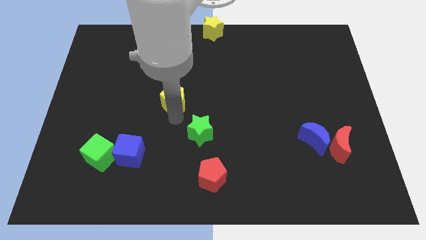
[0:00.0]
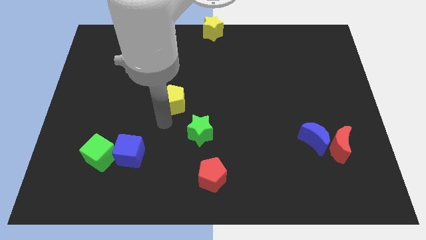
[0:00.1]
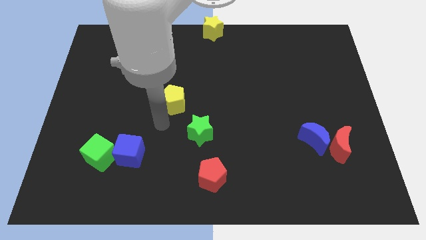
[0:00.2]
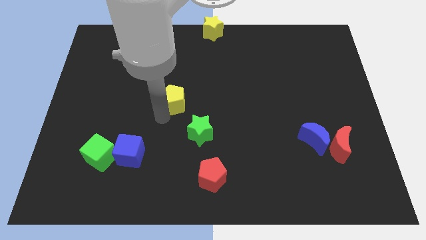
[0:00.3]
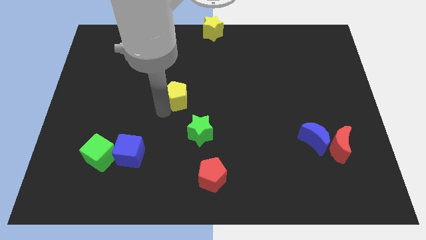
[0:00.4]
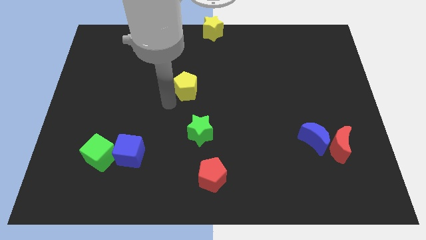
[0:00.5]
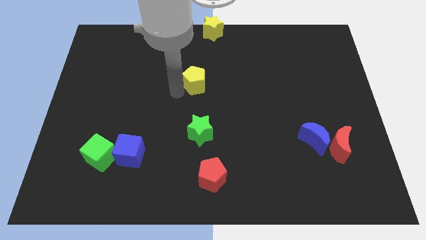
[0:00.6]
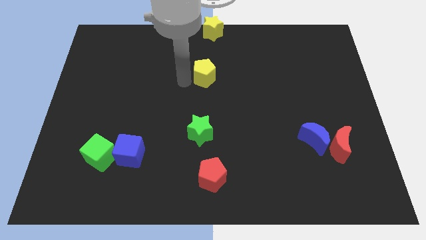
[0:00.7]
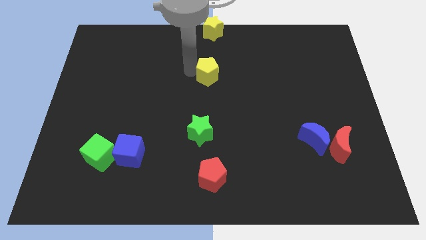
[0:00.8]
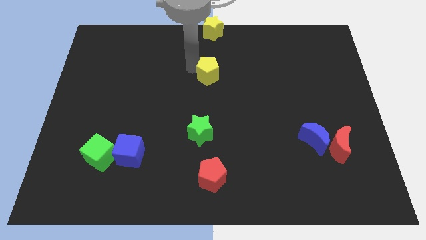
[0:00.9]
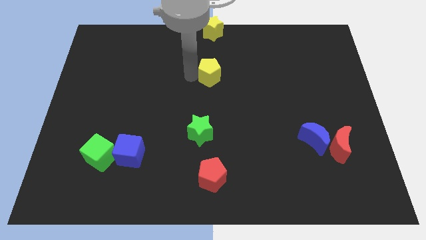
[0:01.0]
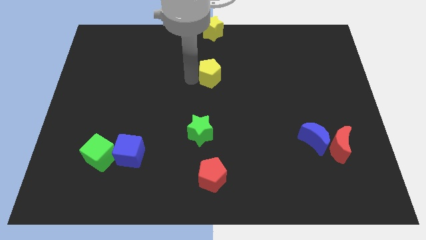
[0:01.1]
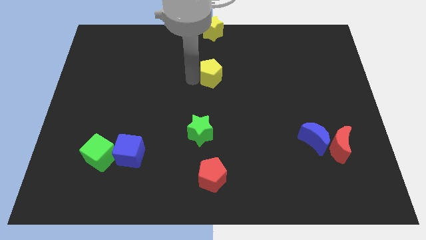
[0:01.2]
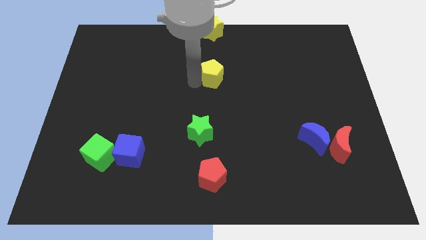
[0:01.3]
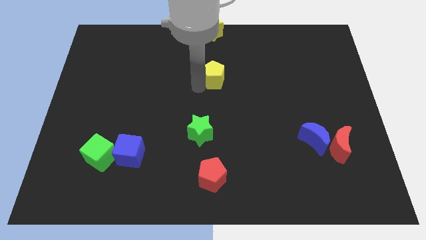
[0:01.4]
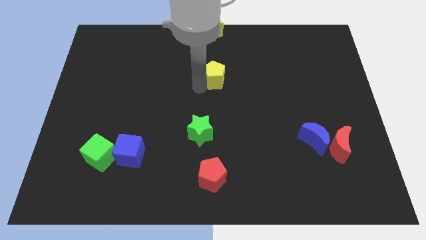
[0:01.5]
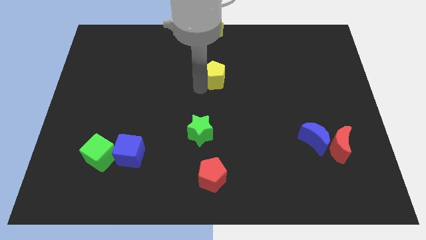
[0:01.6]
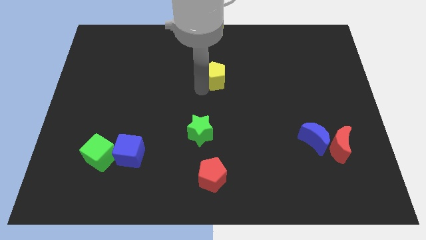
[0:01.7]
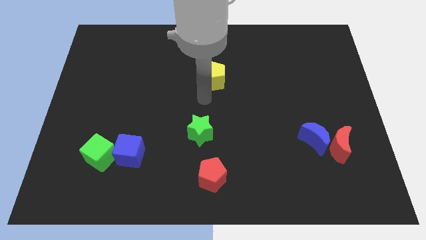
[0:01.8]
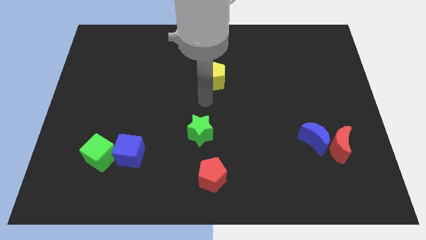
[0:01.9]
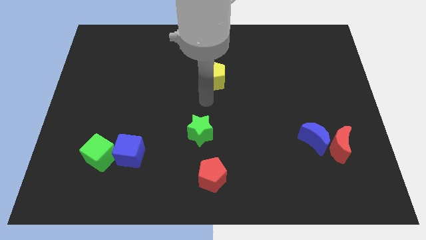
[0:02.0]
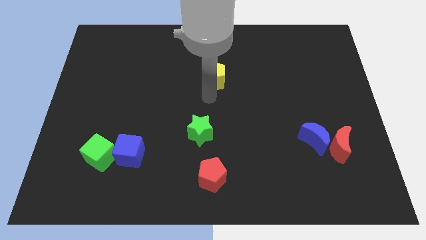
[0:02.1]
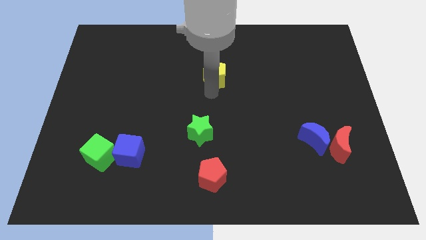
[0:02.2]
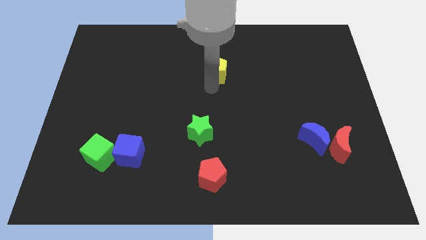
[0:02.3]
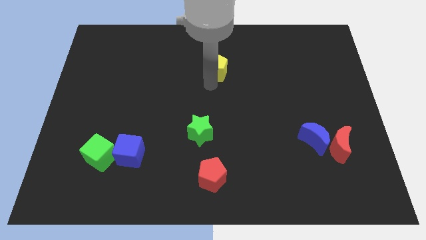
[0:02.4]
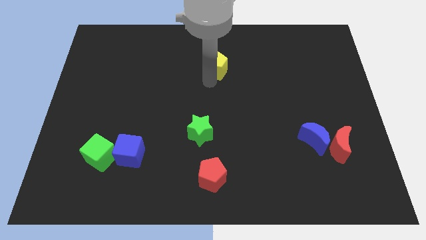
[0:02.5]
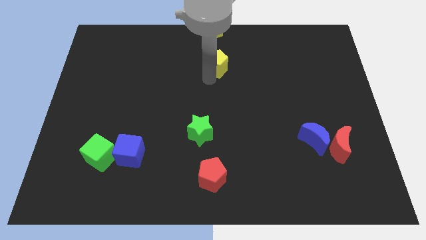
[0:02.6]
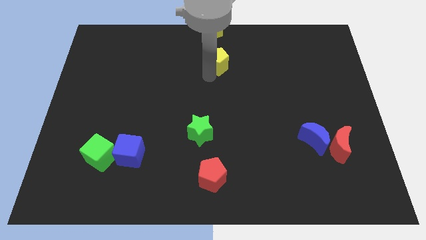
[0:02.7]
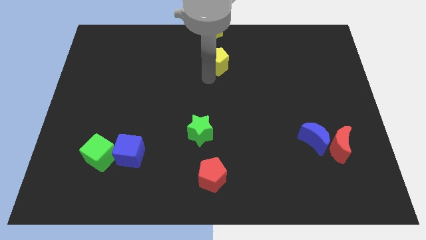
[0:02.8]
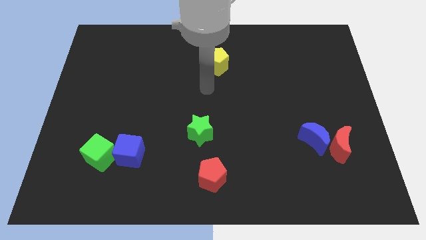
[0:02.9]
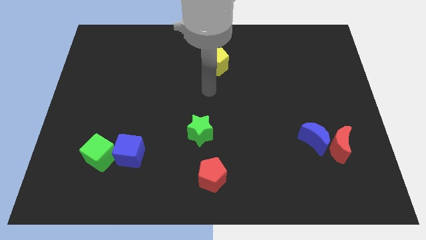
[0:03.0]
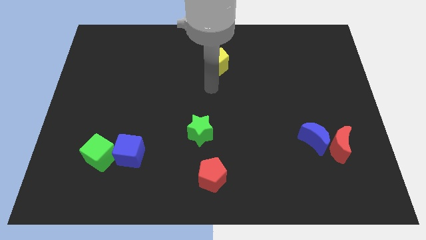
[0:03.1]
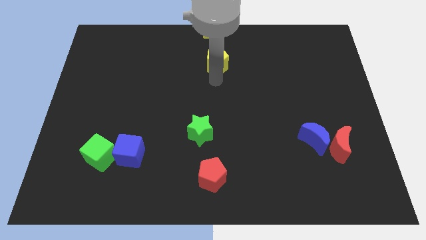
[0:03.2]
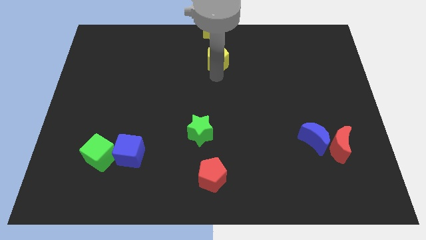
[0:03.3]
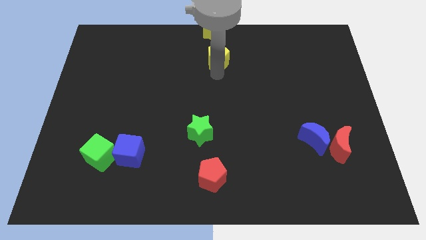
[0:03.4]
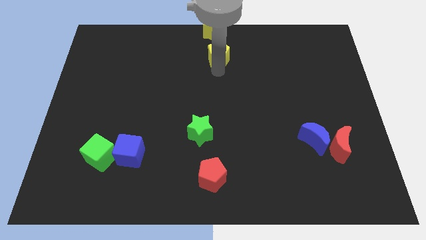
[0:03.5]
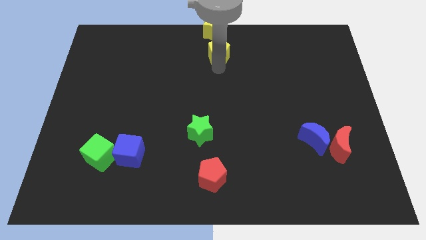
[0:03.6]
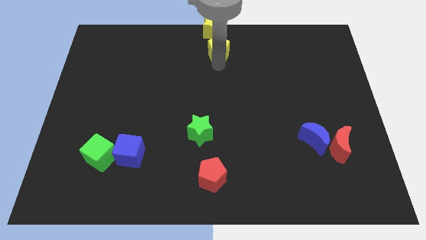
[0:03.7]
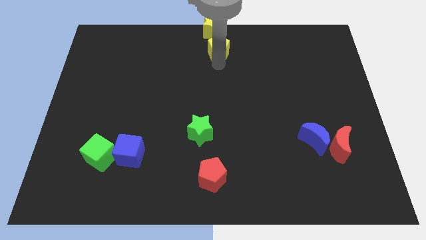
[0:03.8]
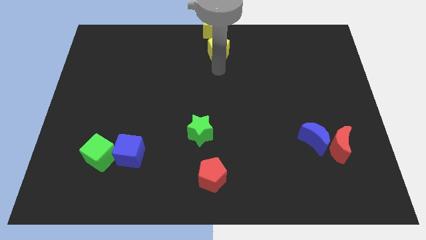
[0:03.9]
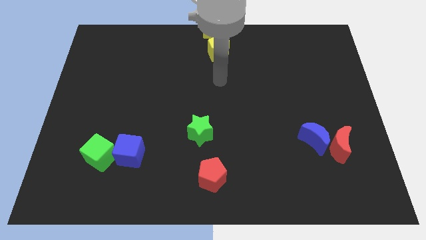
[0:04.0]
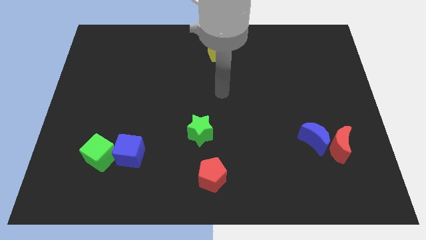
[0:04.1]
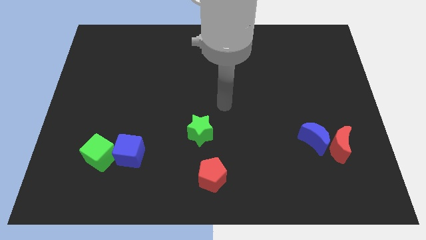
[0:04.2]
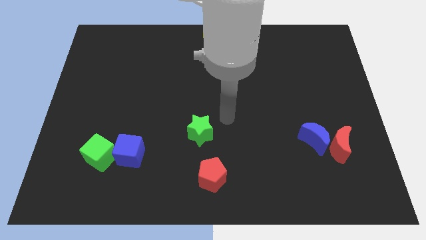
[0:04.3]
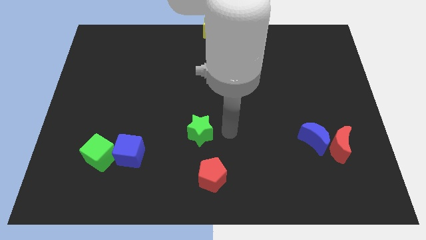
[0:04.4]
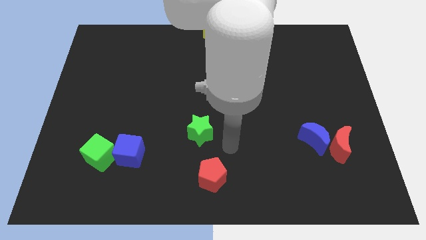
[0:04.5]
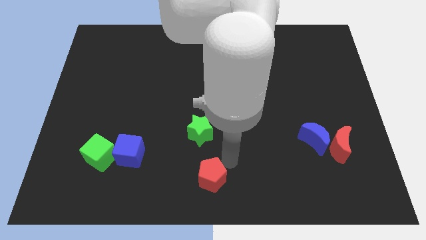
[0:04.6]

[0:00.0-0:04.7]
push the yellow pentagon and yellow star to the top center of the board

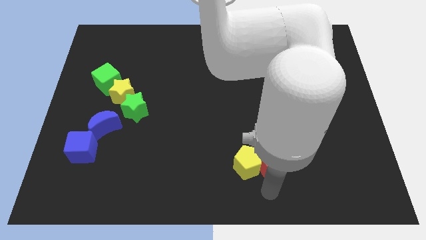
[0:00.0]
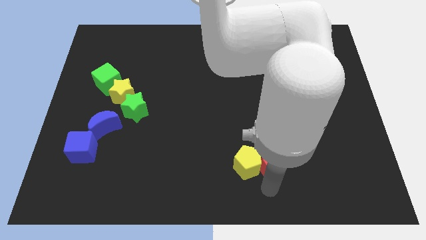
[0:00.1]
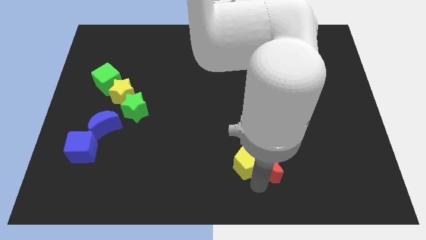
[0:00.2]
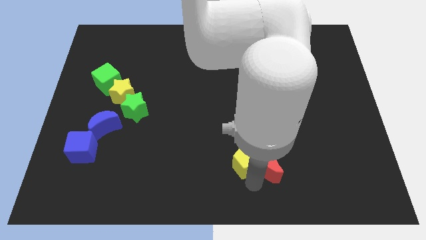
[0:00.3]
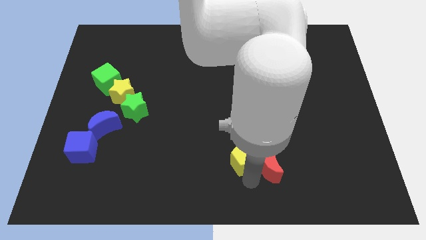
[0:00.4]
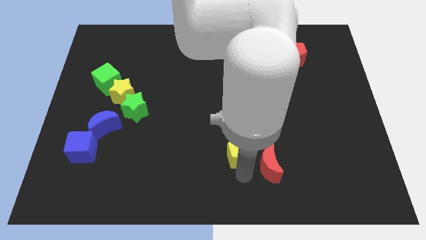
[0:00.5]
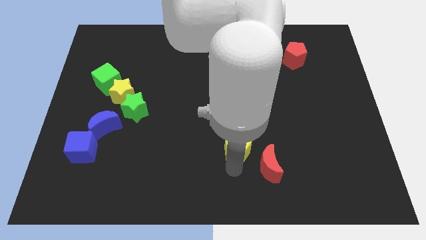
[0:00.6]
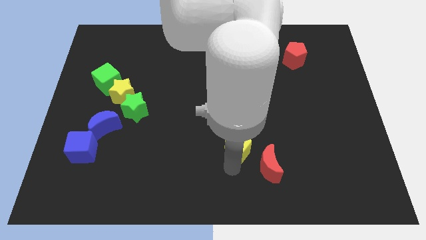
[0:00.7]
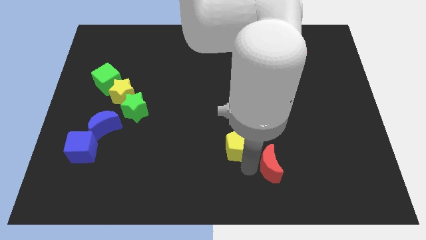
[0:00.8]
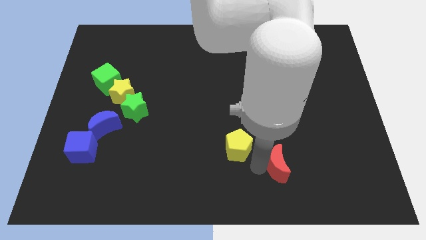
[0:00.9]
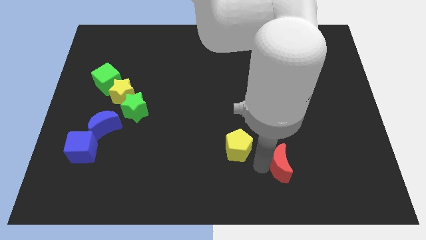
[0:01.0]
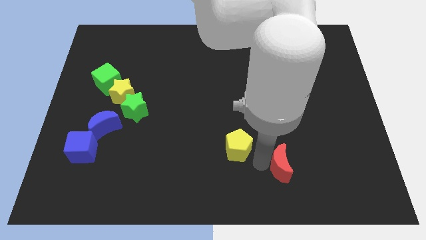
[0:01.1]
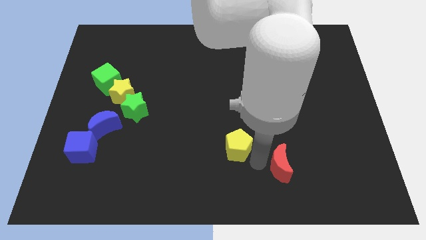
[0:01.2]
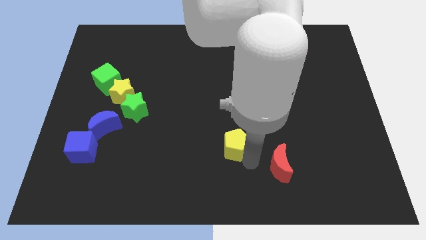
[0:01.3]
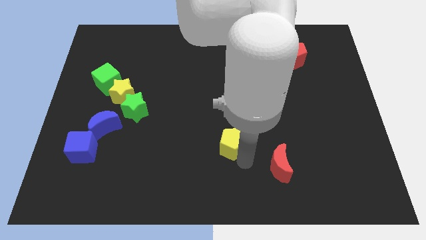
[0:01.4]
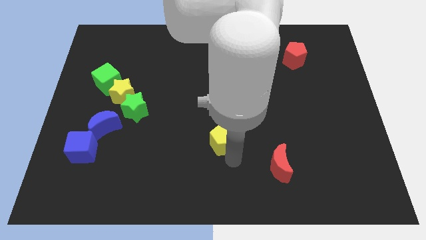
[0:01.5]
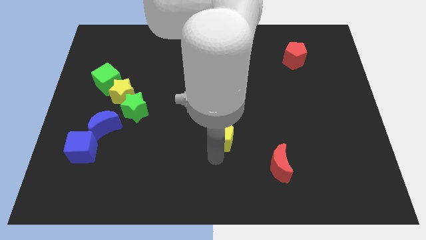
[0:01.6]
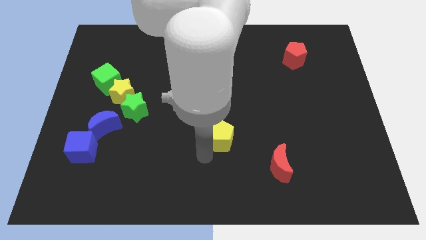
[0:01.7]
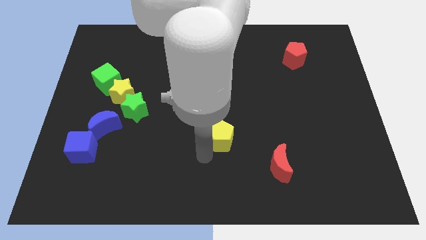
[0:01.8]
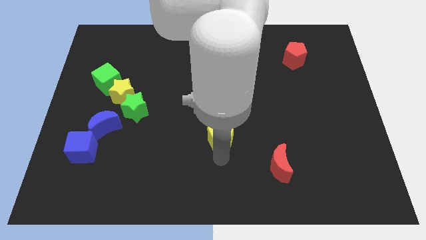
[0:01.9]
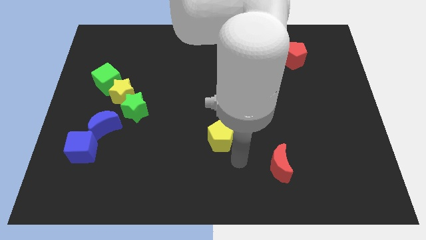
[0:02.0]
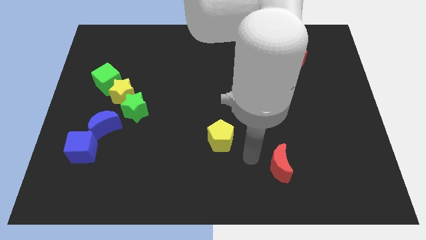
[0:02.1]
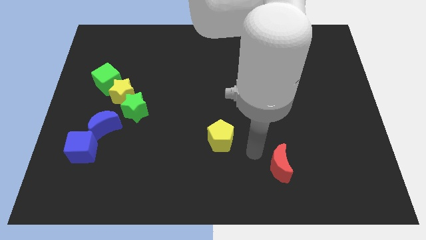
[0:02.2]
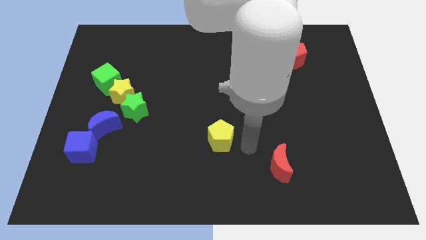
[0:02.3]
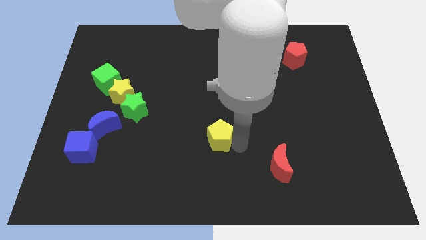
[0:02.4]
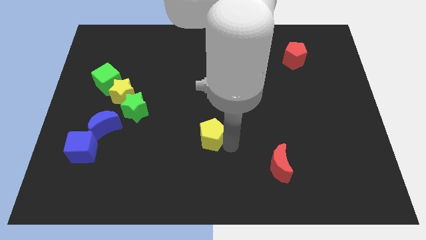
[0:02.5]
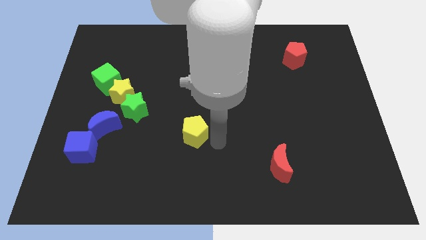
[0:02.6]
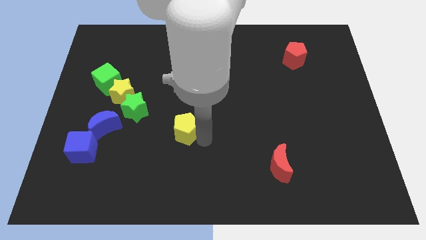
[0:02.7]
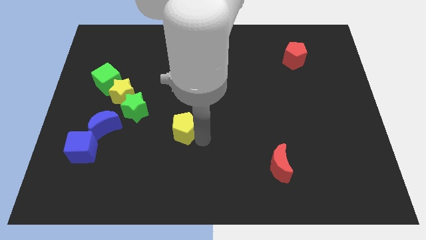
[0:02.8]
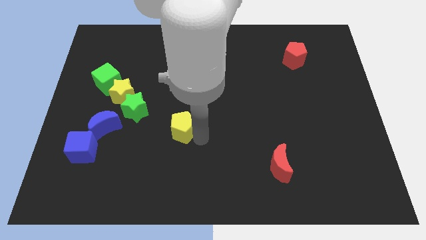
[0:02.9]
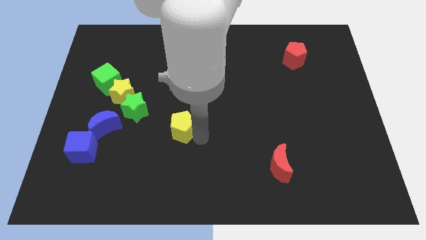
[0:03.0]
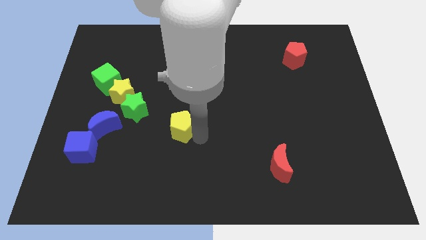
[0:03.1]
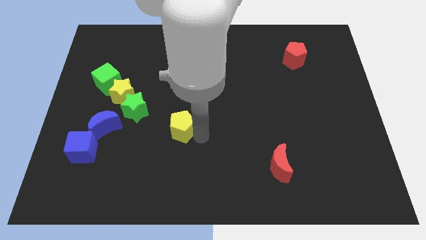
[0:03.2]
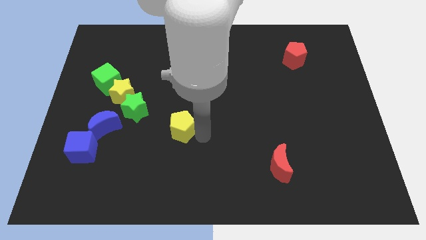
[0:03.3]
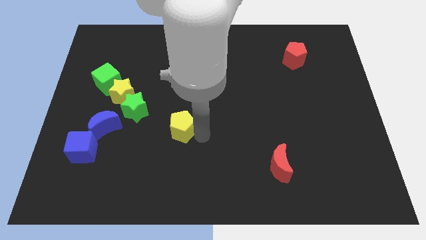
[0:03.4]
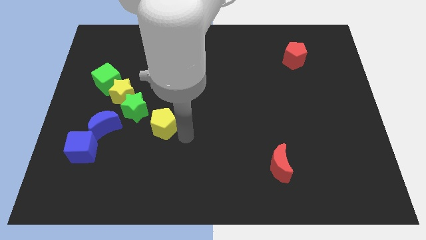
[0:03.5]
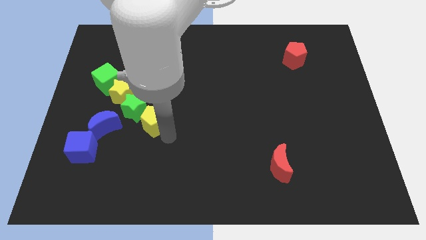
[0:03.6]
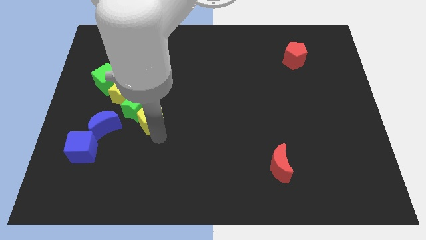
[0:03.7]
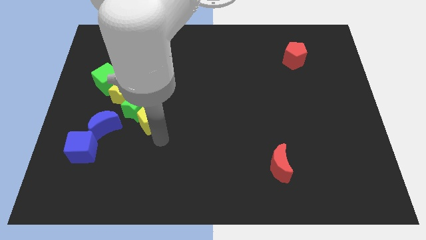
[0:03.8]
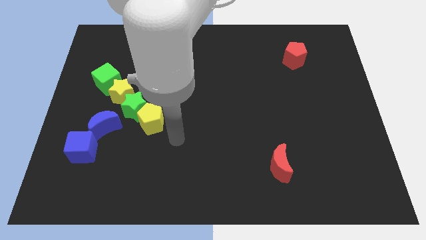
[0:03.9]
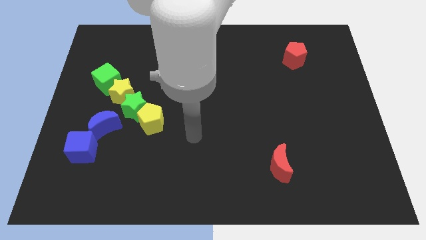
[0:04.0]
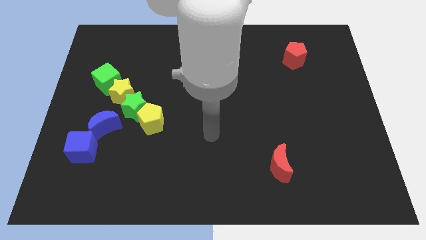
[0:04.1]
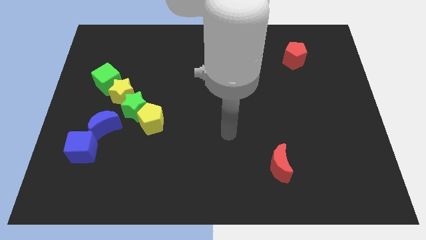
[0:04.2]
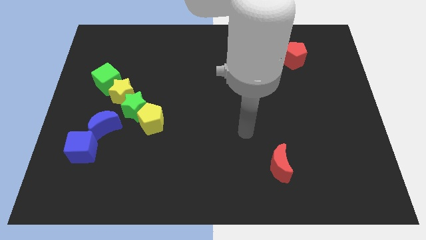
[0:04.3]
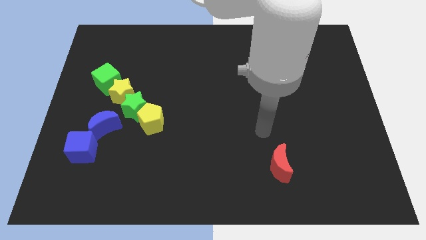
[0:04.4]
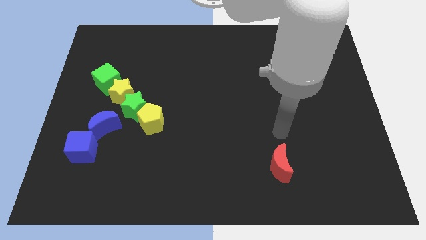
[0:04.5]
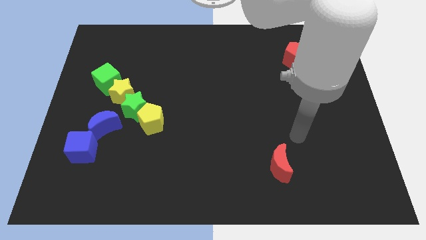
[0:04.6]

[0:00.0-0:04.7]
separate the yellow pentagon and the red crescent
